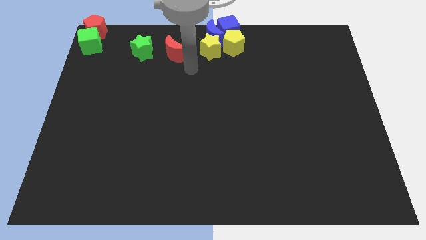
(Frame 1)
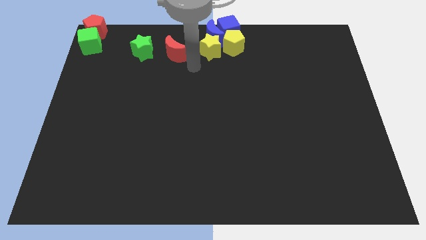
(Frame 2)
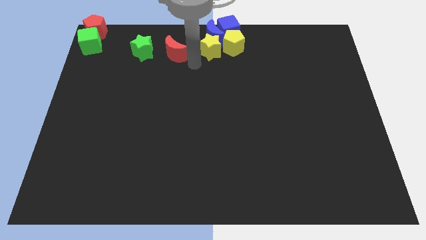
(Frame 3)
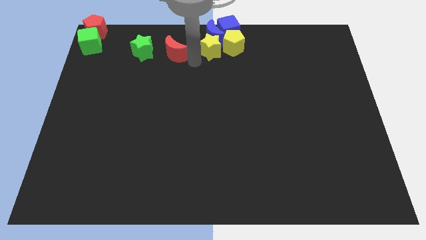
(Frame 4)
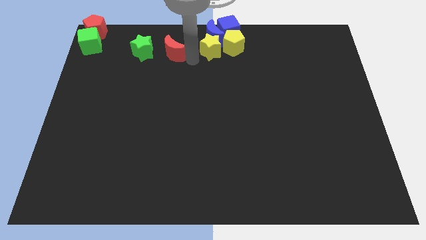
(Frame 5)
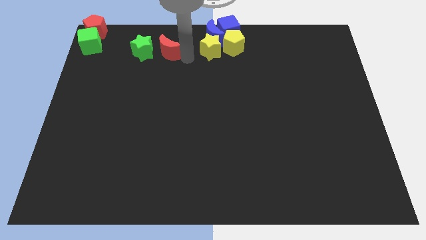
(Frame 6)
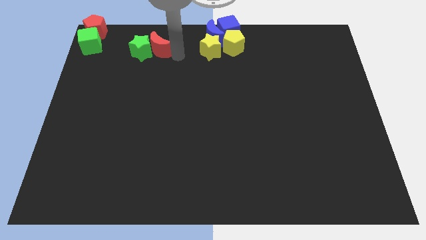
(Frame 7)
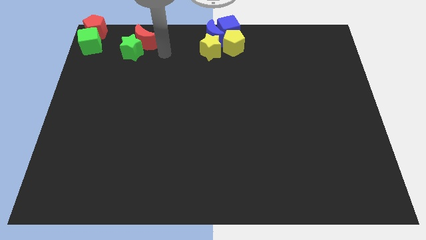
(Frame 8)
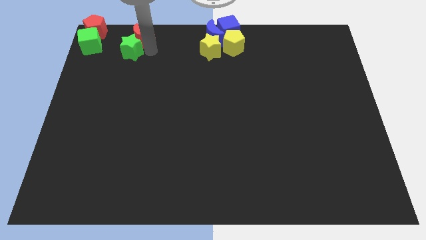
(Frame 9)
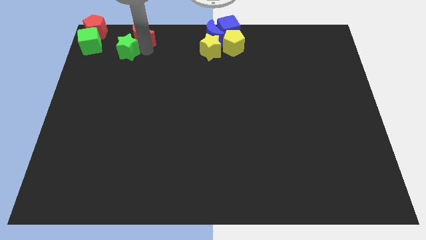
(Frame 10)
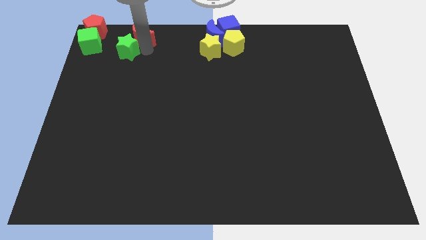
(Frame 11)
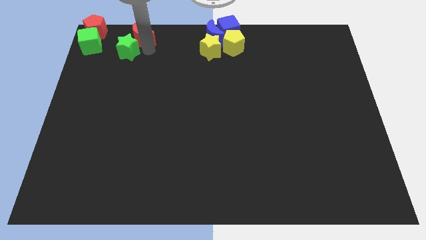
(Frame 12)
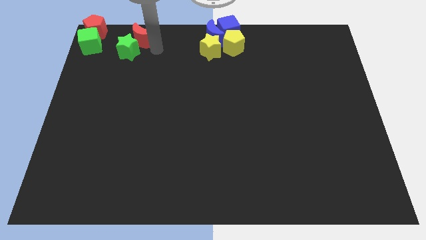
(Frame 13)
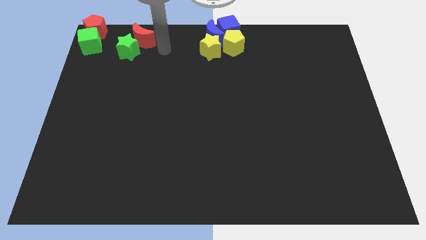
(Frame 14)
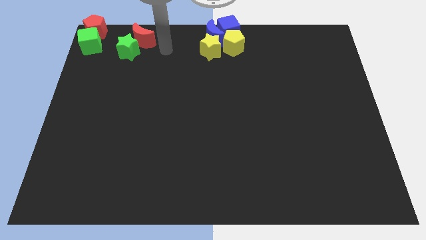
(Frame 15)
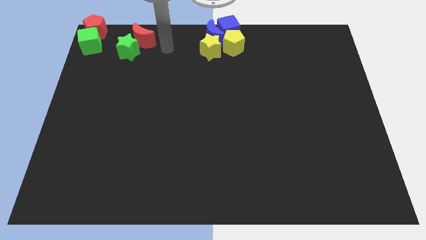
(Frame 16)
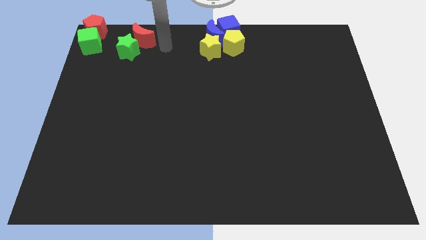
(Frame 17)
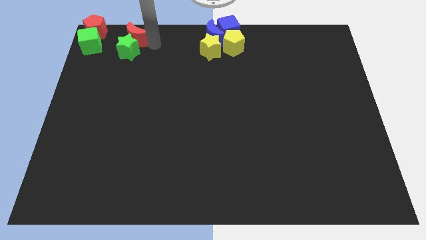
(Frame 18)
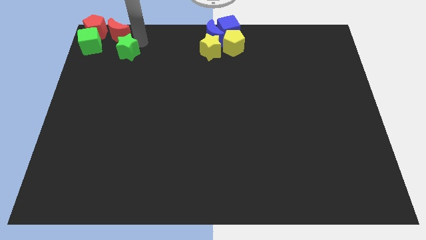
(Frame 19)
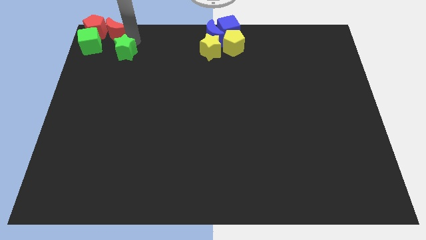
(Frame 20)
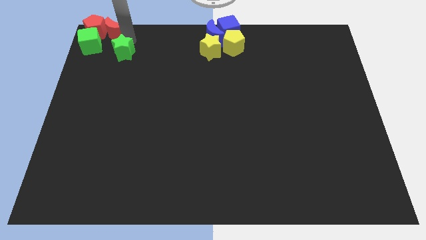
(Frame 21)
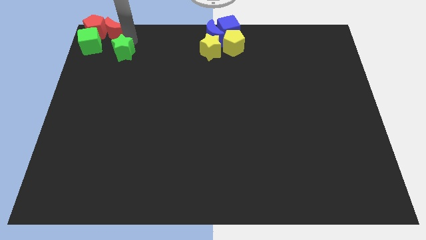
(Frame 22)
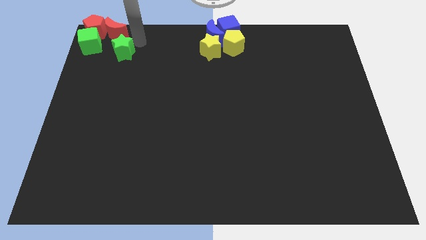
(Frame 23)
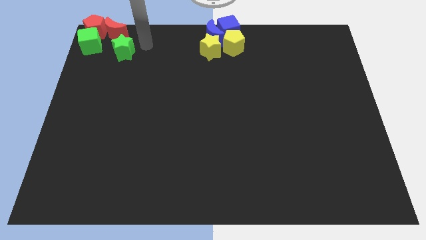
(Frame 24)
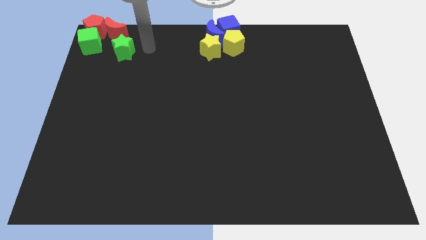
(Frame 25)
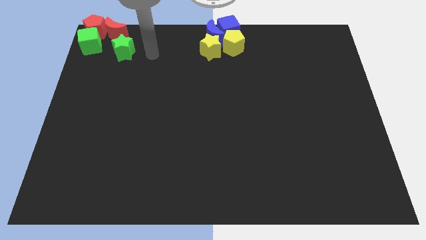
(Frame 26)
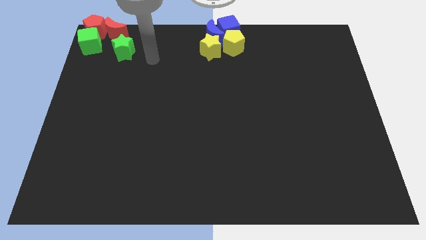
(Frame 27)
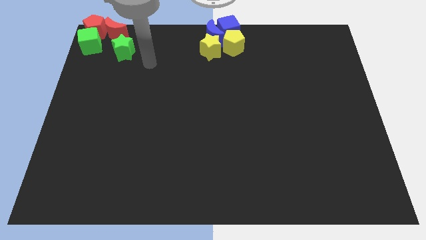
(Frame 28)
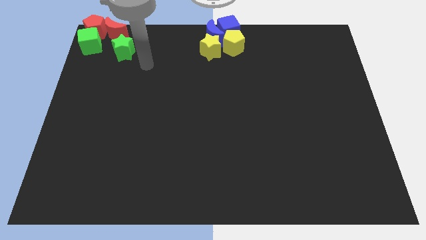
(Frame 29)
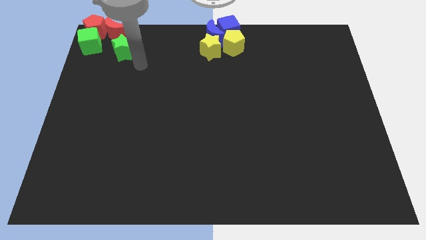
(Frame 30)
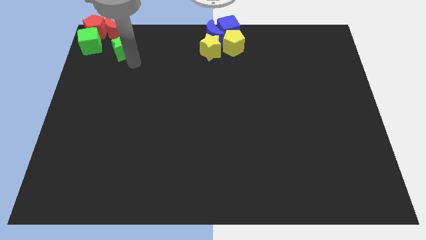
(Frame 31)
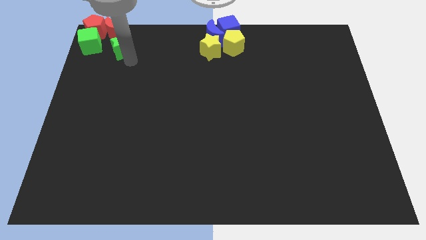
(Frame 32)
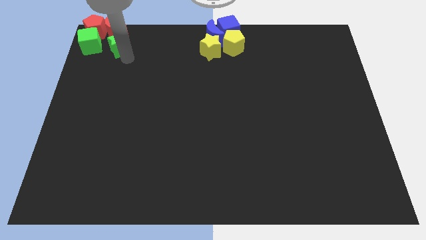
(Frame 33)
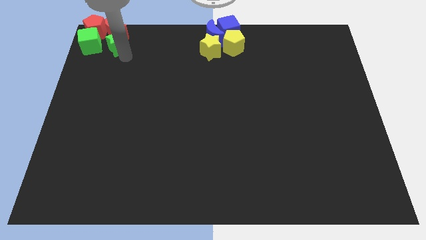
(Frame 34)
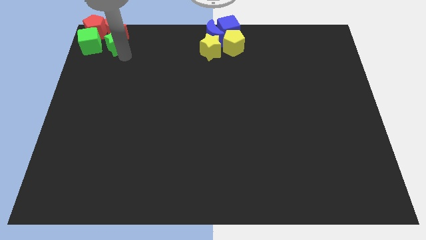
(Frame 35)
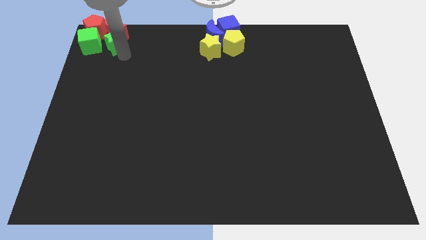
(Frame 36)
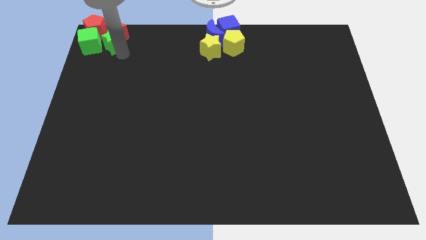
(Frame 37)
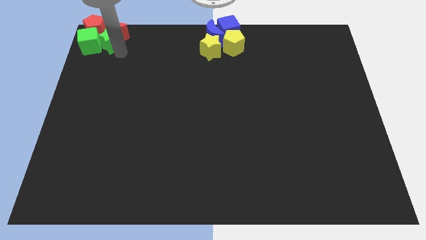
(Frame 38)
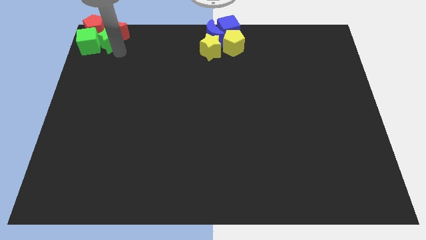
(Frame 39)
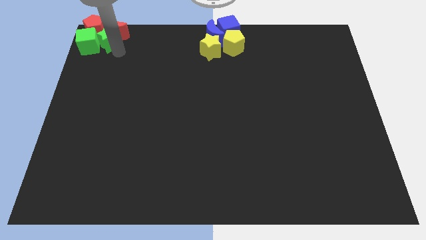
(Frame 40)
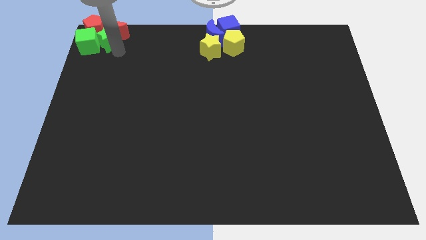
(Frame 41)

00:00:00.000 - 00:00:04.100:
push the green star and red crescent into the group of blocks at the top left side of the board

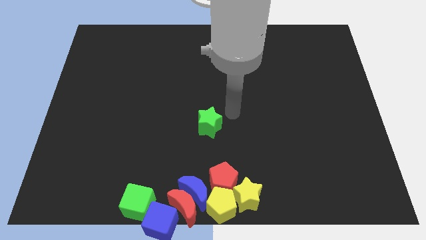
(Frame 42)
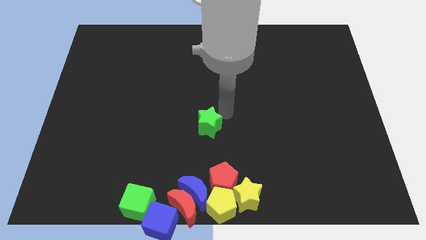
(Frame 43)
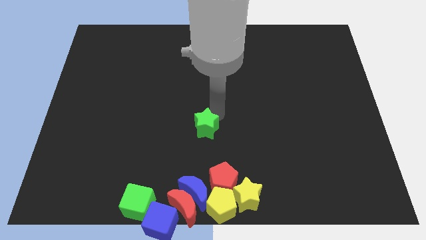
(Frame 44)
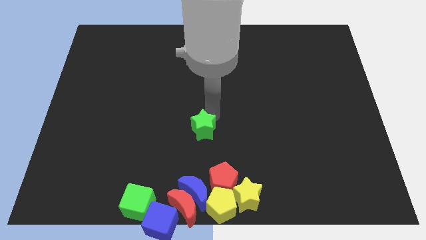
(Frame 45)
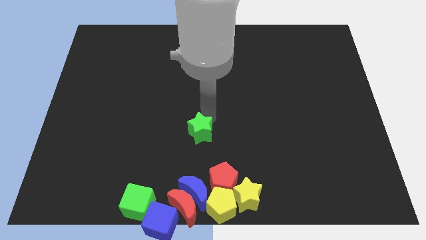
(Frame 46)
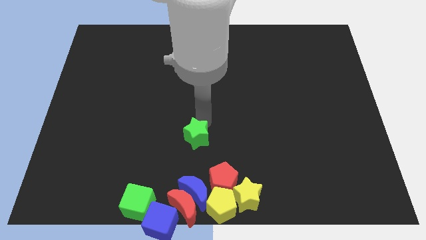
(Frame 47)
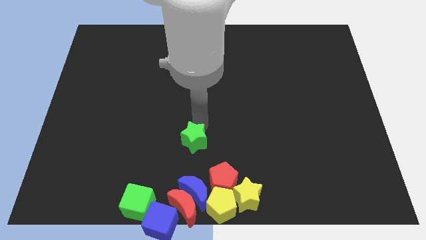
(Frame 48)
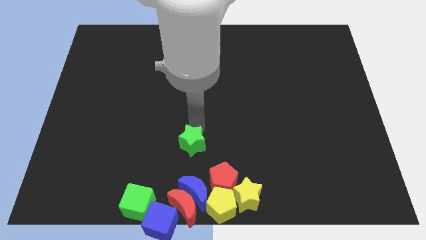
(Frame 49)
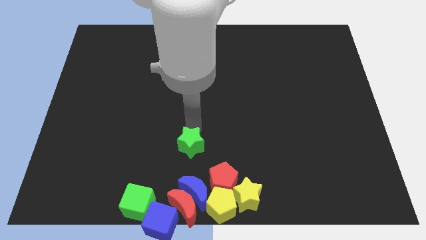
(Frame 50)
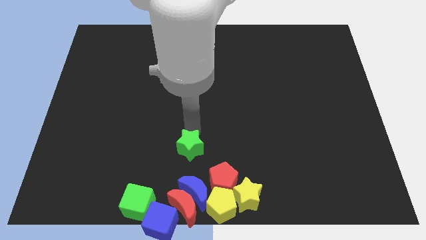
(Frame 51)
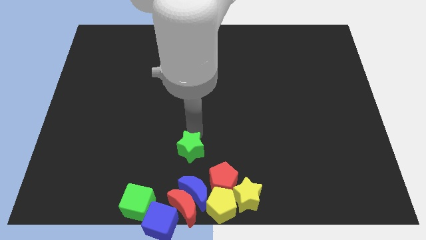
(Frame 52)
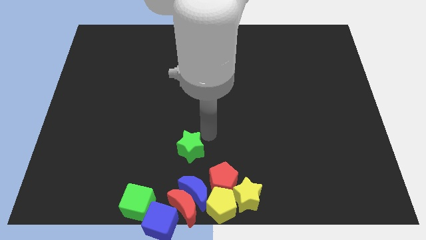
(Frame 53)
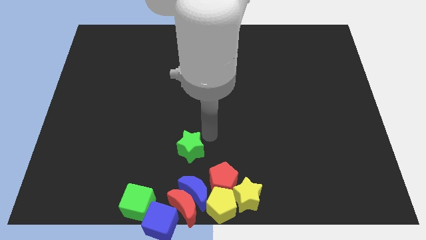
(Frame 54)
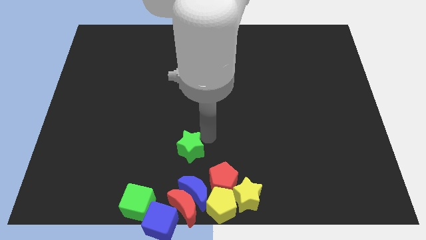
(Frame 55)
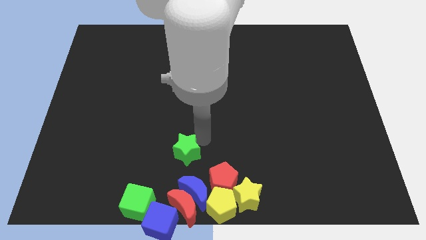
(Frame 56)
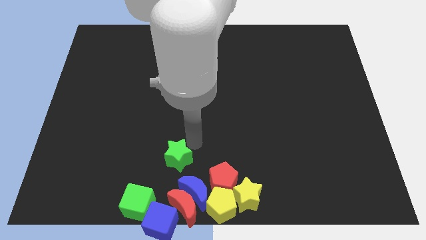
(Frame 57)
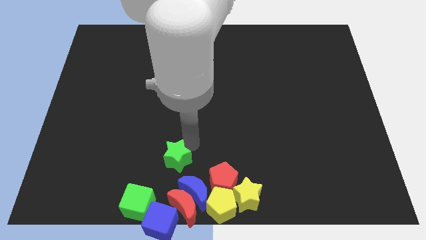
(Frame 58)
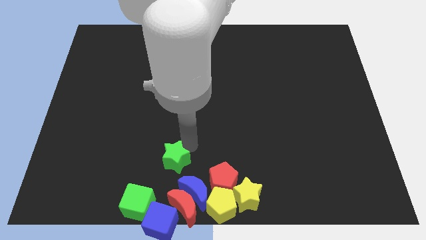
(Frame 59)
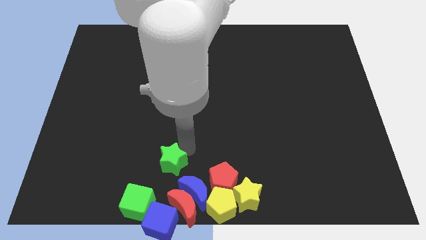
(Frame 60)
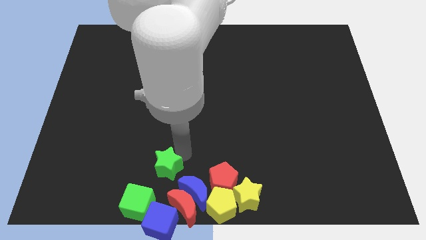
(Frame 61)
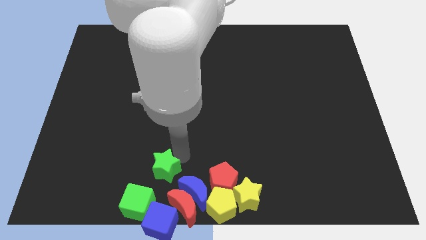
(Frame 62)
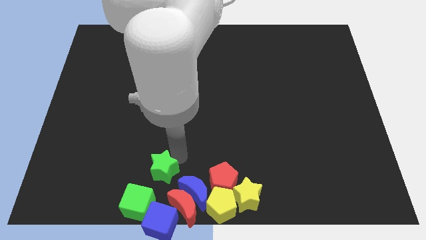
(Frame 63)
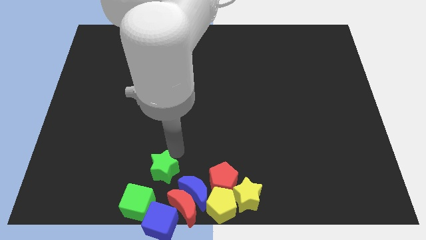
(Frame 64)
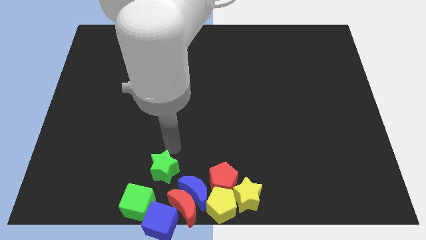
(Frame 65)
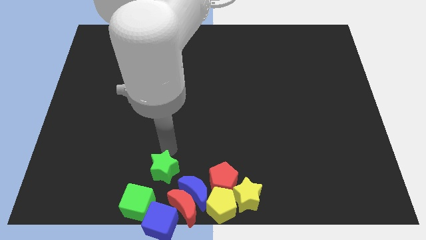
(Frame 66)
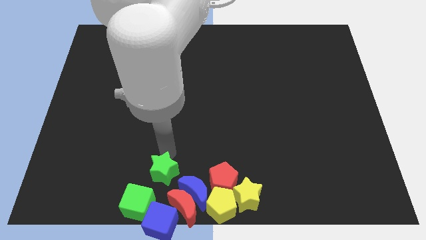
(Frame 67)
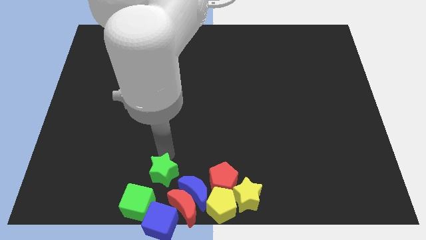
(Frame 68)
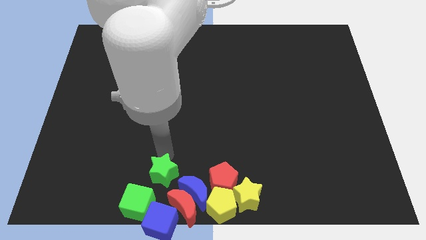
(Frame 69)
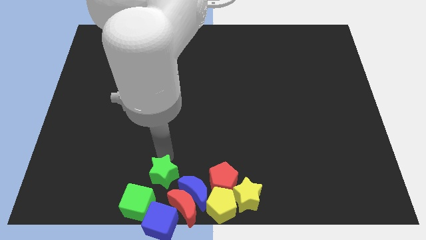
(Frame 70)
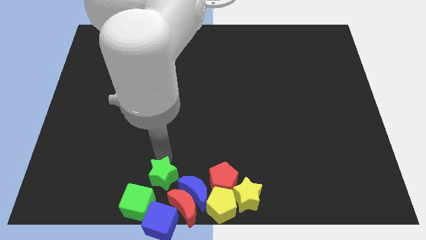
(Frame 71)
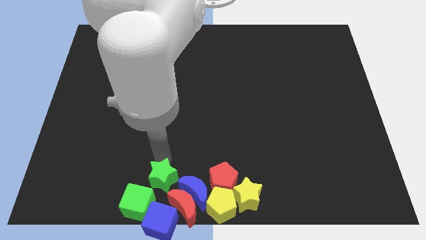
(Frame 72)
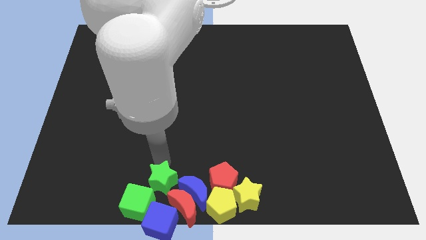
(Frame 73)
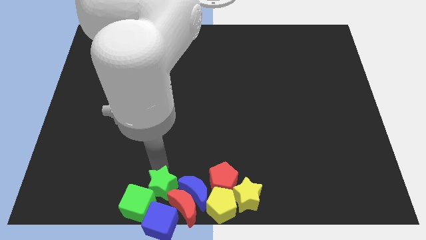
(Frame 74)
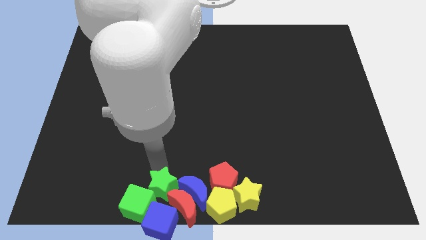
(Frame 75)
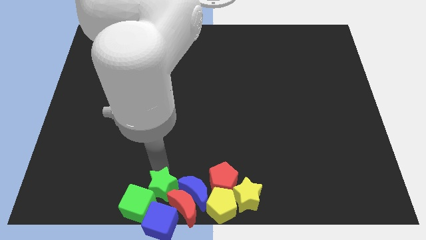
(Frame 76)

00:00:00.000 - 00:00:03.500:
slide the green star into the group of blocks

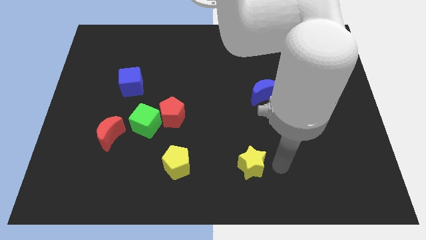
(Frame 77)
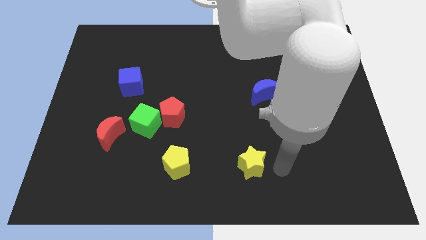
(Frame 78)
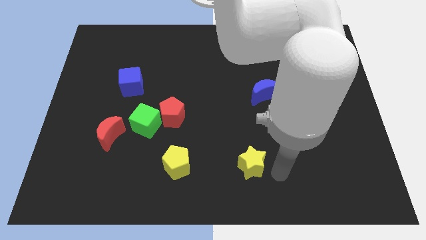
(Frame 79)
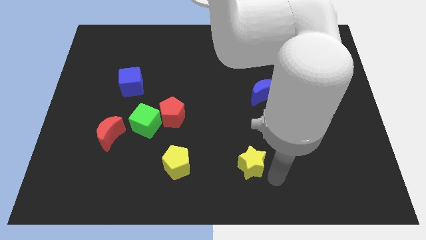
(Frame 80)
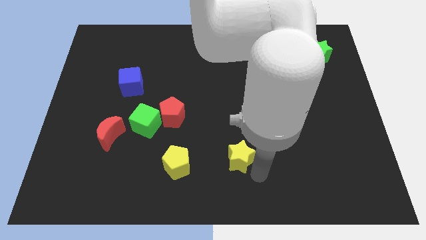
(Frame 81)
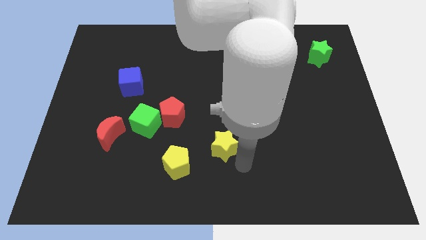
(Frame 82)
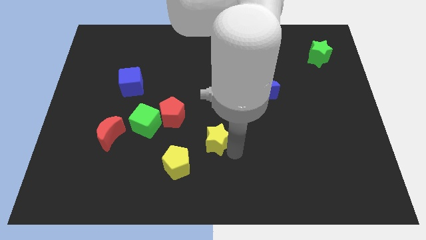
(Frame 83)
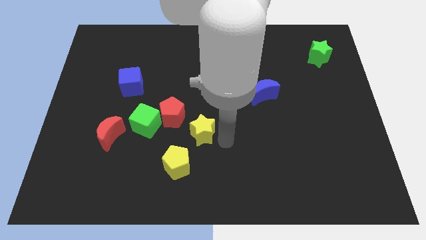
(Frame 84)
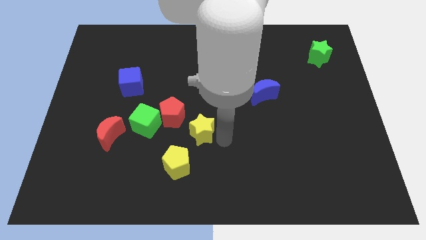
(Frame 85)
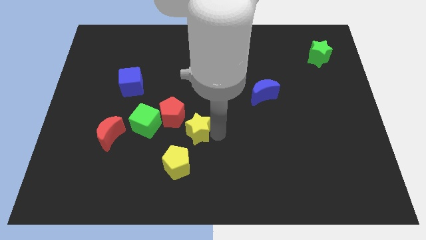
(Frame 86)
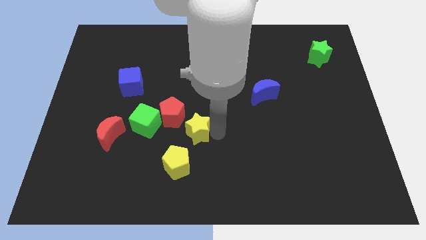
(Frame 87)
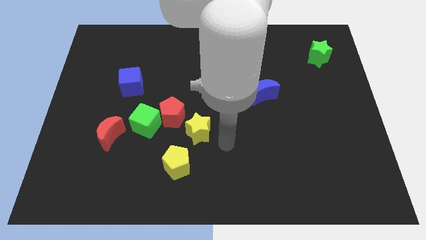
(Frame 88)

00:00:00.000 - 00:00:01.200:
move the yellow star diagnoal to yellow pentagon

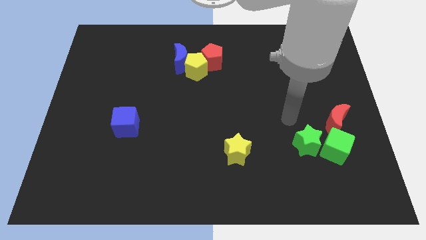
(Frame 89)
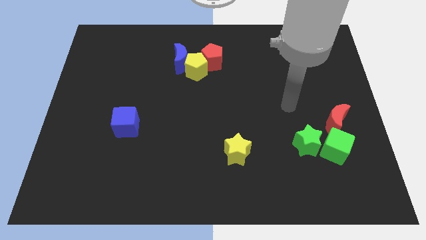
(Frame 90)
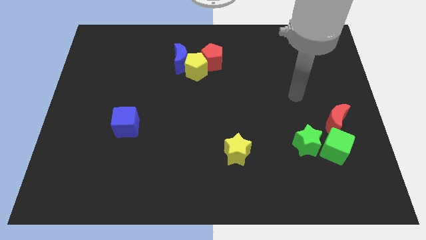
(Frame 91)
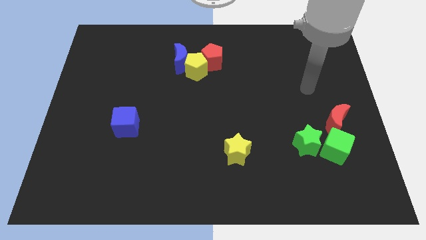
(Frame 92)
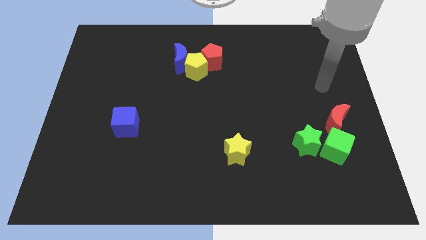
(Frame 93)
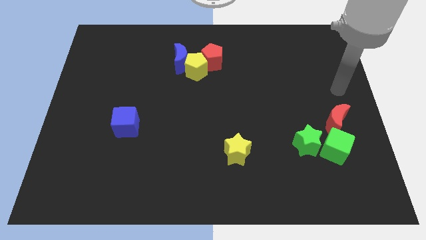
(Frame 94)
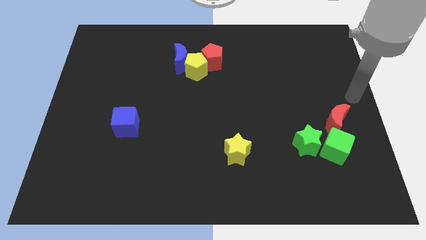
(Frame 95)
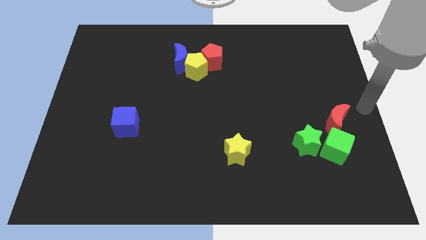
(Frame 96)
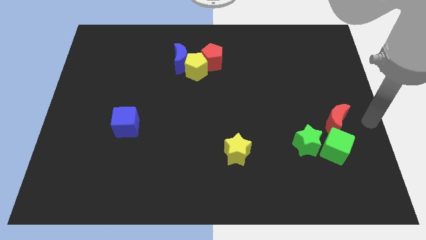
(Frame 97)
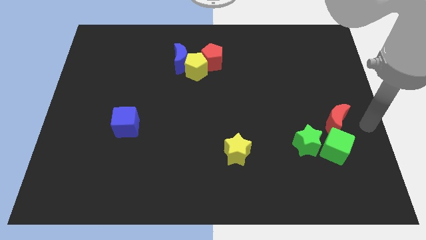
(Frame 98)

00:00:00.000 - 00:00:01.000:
point your arm at the right of the red crescent
